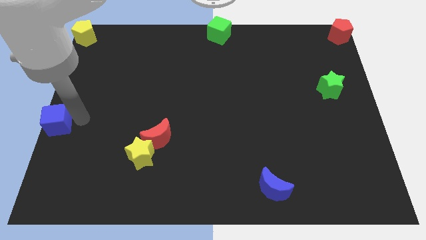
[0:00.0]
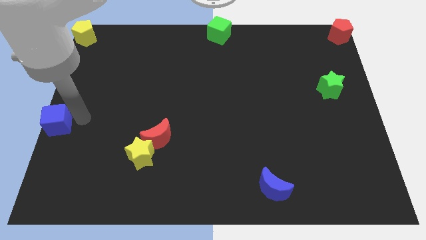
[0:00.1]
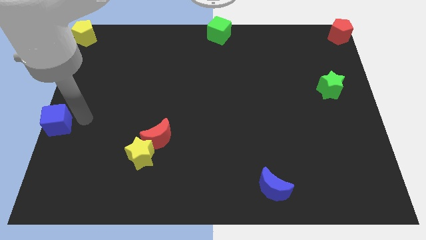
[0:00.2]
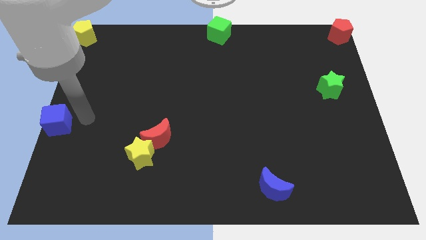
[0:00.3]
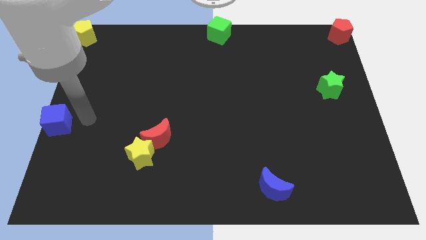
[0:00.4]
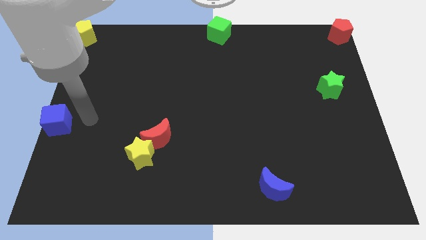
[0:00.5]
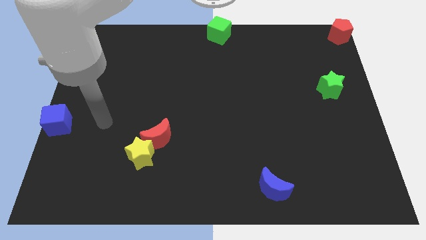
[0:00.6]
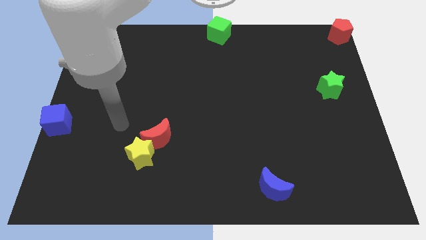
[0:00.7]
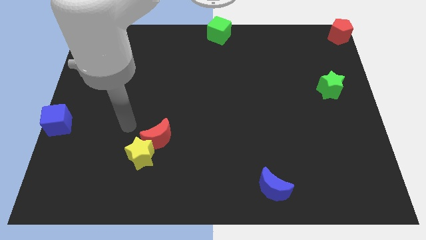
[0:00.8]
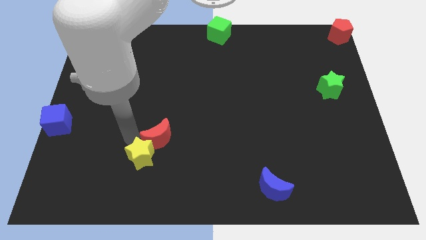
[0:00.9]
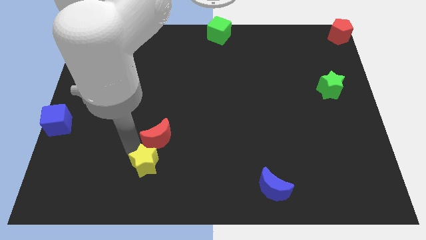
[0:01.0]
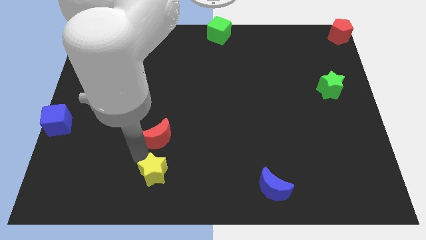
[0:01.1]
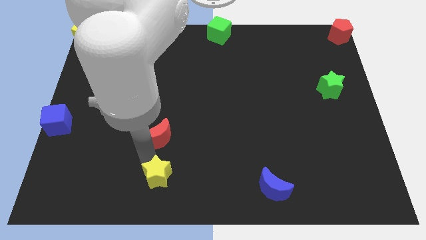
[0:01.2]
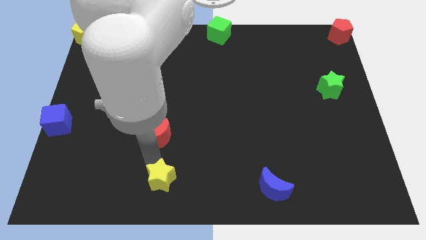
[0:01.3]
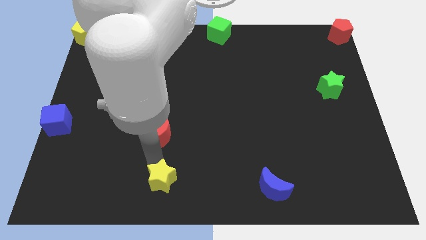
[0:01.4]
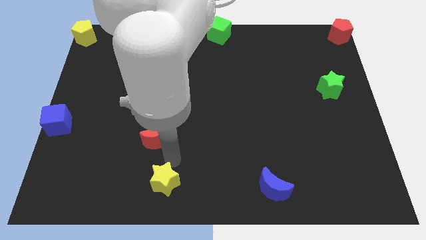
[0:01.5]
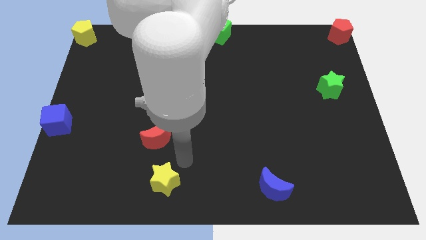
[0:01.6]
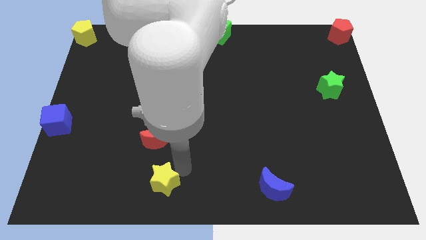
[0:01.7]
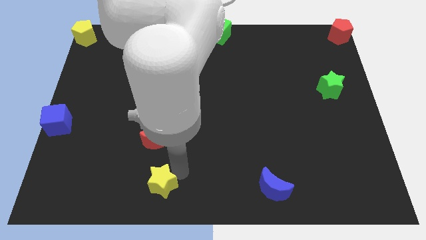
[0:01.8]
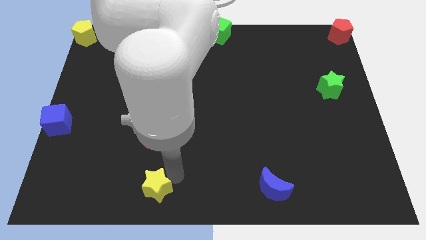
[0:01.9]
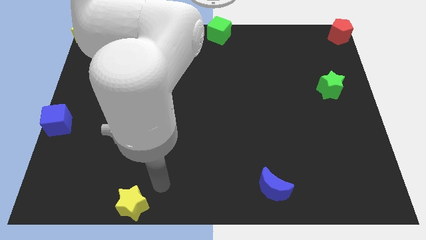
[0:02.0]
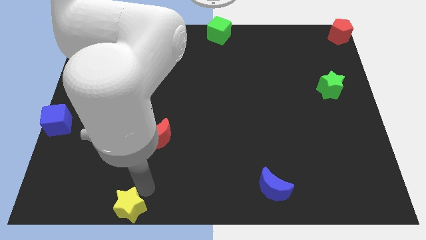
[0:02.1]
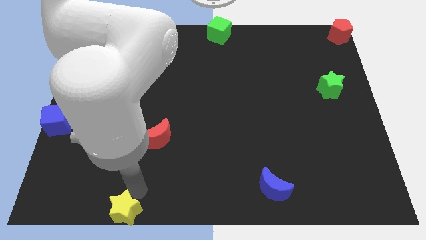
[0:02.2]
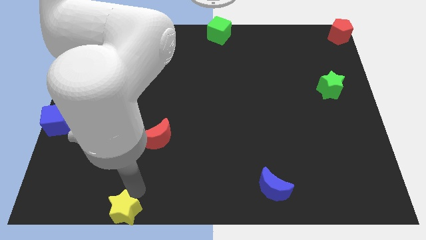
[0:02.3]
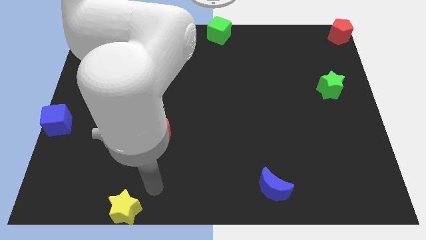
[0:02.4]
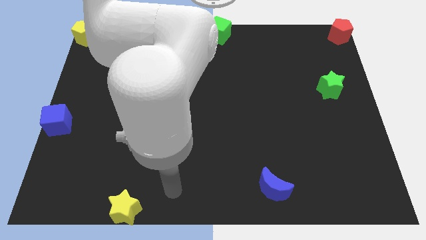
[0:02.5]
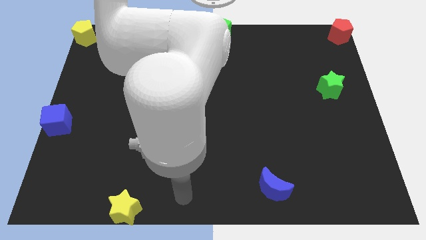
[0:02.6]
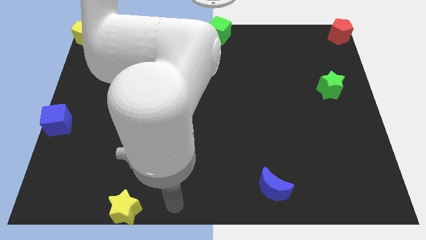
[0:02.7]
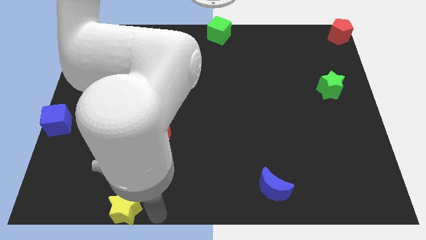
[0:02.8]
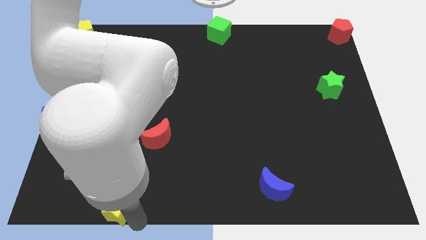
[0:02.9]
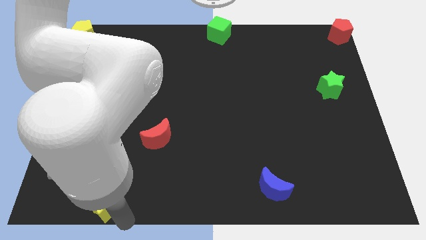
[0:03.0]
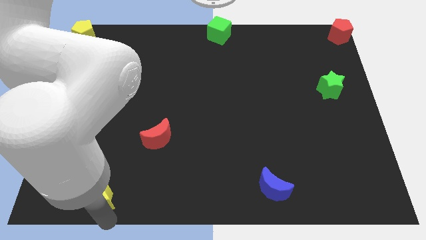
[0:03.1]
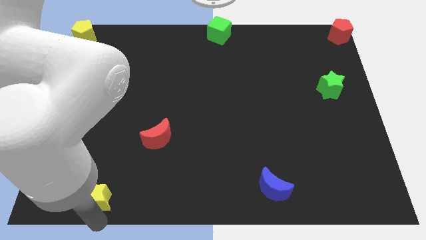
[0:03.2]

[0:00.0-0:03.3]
drag the yellow star towards the bottom center

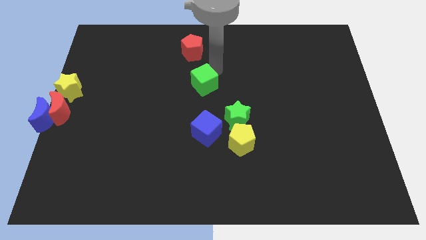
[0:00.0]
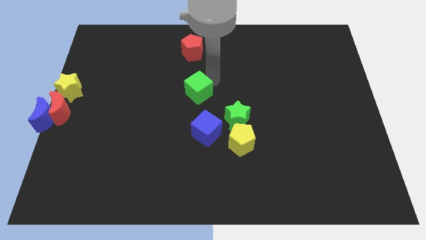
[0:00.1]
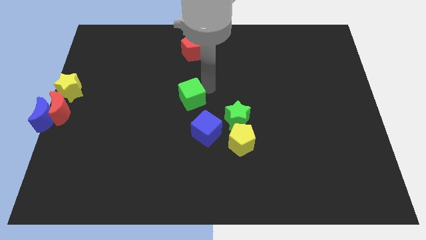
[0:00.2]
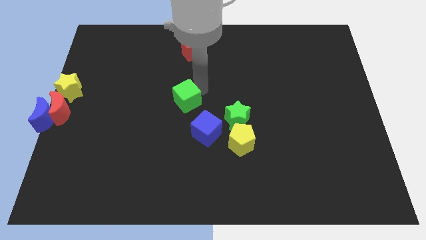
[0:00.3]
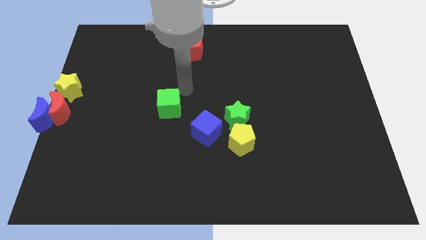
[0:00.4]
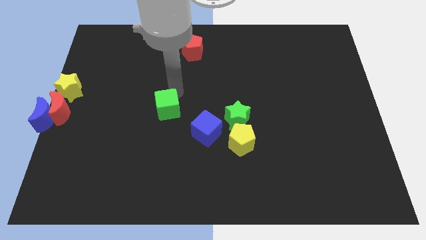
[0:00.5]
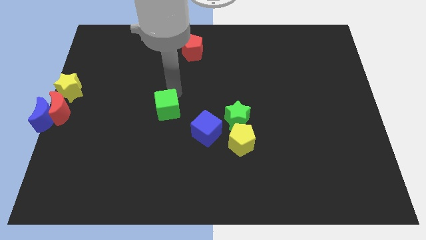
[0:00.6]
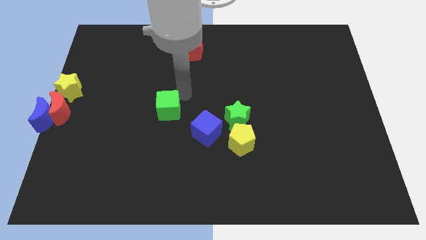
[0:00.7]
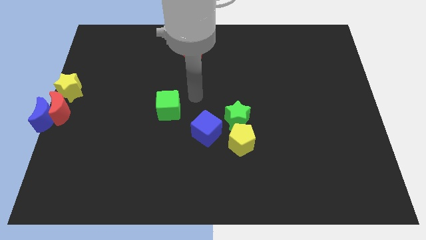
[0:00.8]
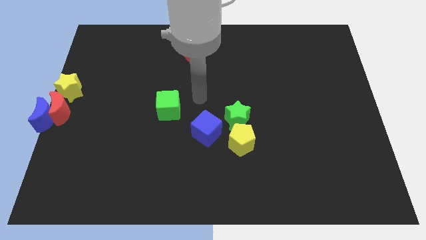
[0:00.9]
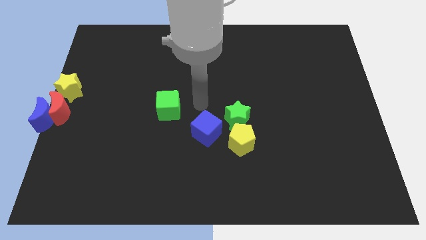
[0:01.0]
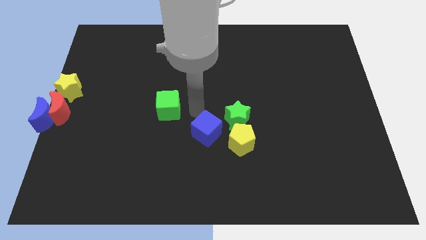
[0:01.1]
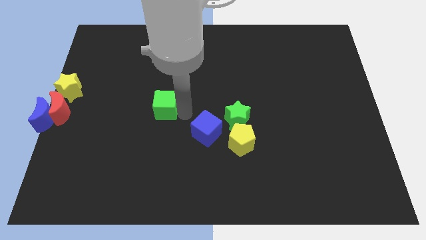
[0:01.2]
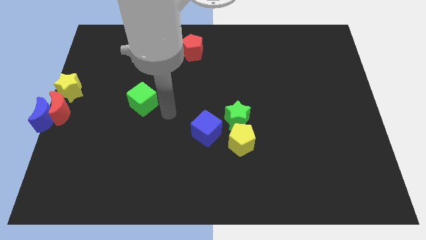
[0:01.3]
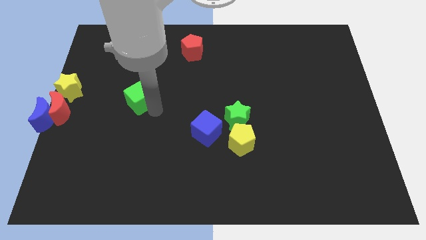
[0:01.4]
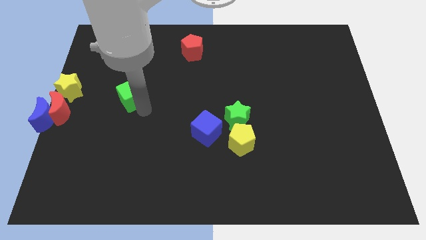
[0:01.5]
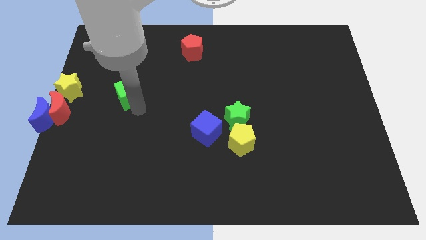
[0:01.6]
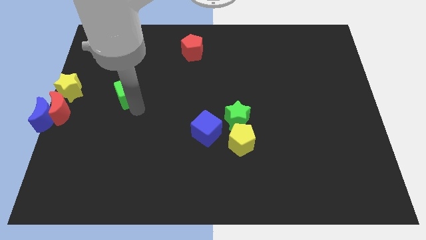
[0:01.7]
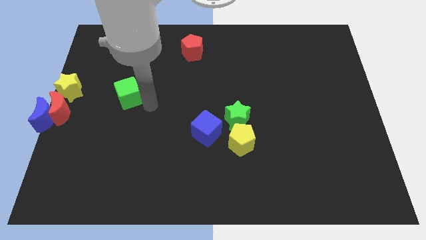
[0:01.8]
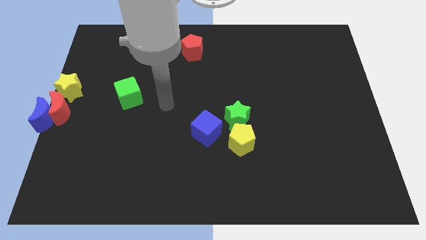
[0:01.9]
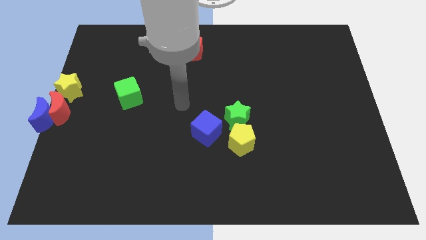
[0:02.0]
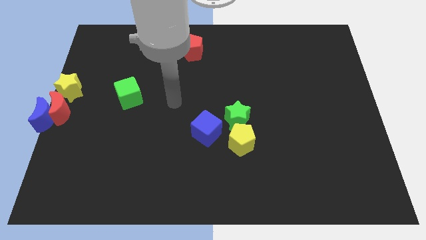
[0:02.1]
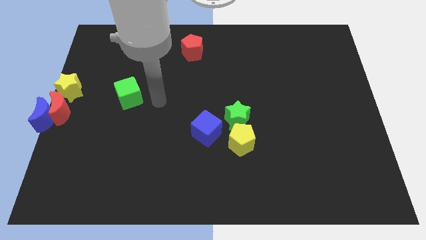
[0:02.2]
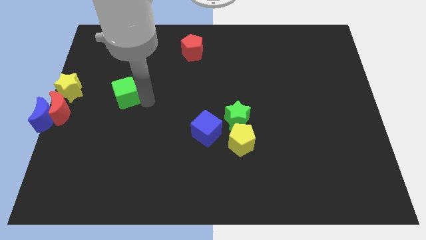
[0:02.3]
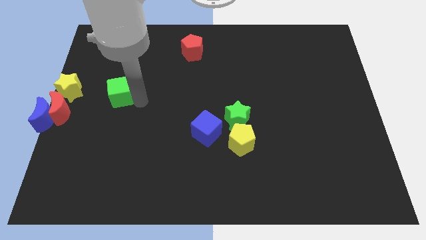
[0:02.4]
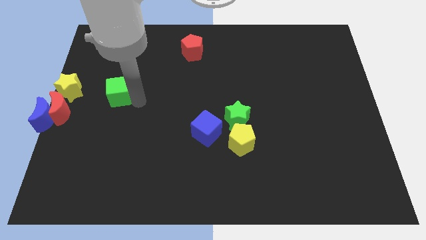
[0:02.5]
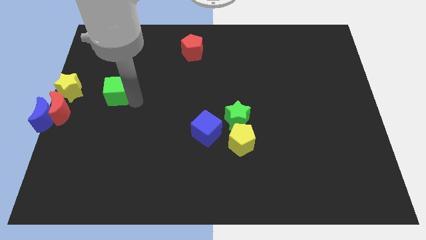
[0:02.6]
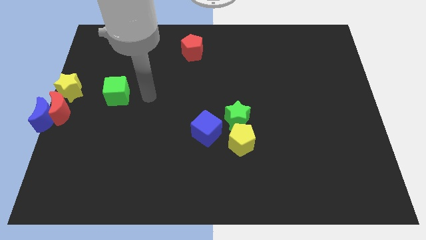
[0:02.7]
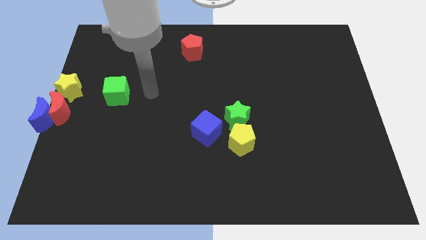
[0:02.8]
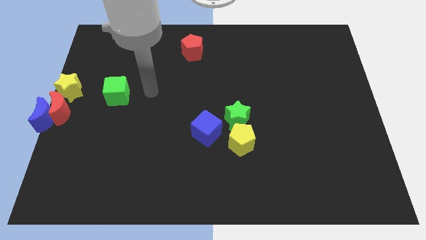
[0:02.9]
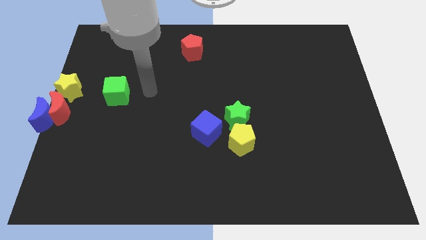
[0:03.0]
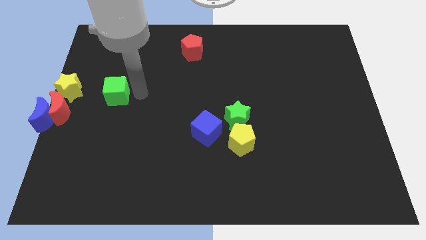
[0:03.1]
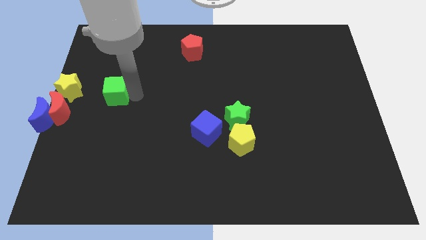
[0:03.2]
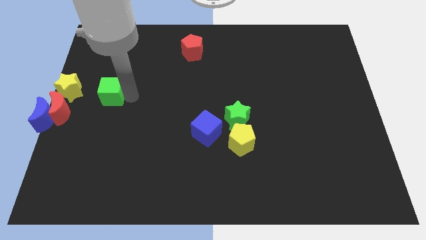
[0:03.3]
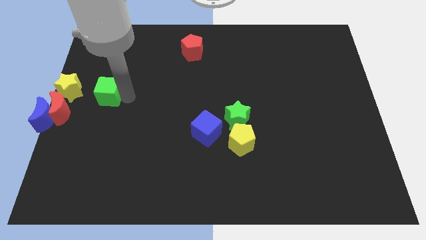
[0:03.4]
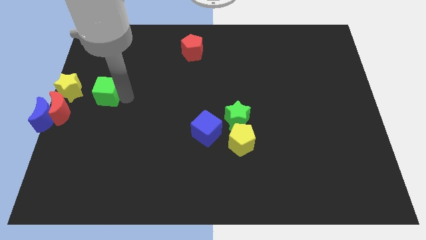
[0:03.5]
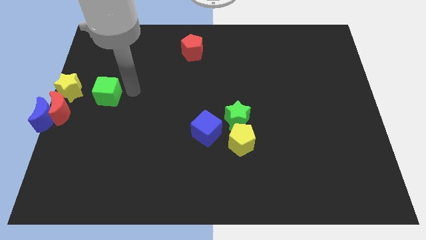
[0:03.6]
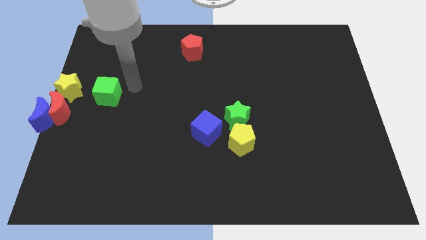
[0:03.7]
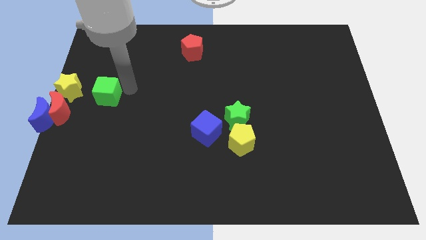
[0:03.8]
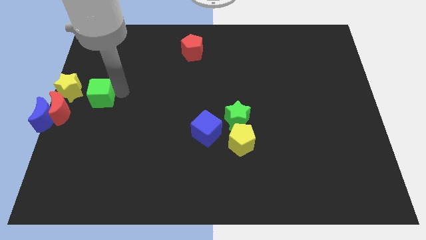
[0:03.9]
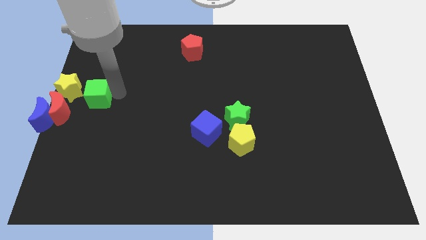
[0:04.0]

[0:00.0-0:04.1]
push the green cube to the right side of the yellow star

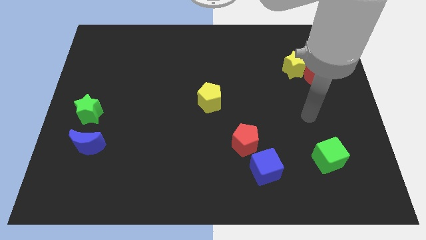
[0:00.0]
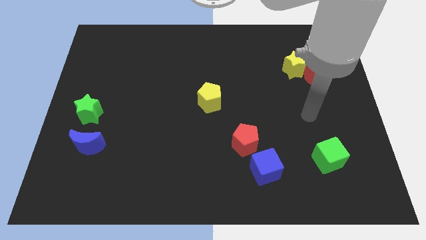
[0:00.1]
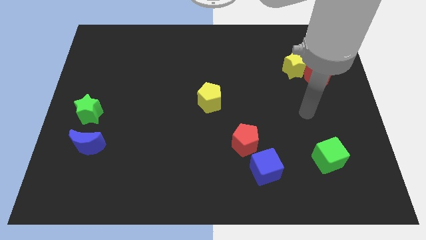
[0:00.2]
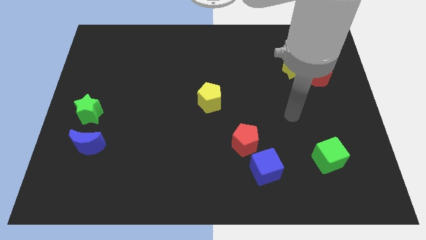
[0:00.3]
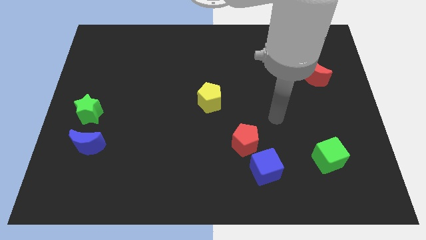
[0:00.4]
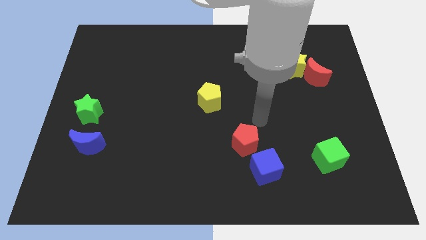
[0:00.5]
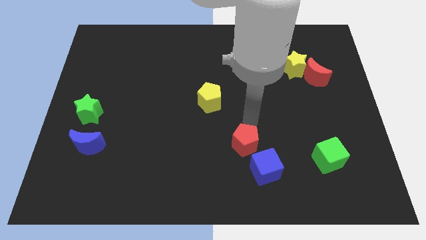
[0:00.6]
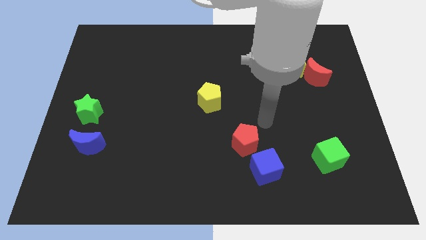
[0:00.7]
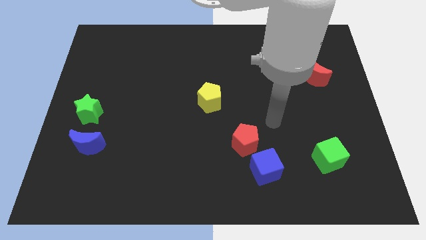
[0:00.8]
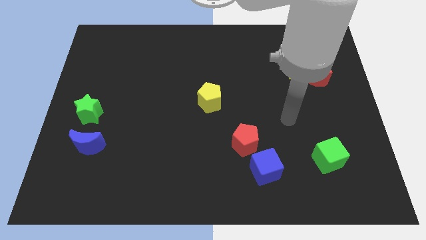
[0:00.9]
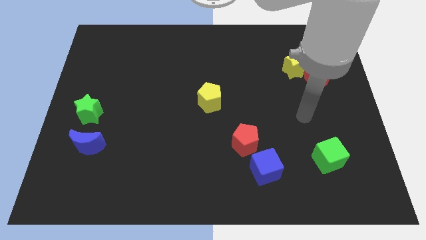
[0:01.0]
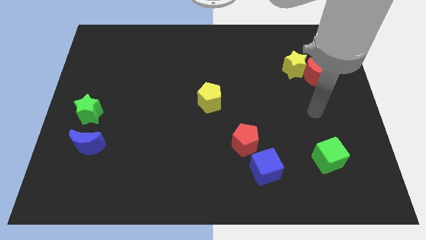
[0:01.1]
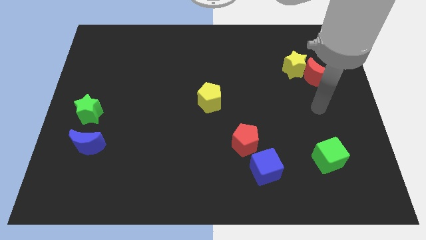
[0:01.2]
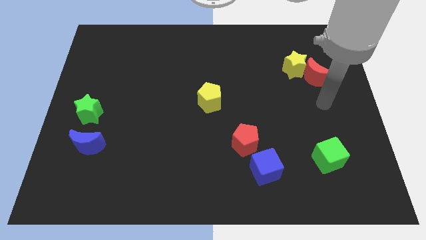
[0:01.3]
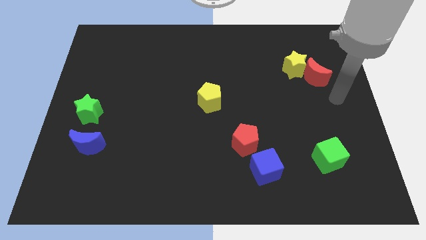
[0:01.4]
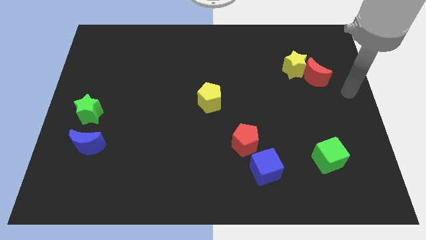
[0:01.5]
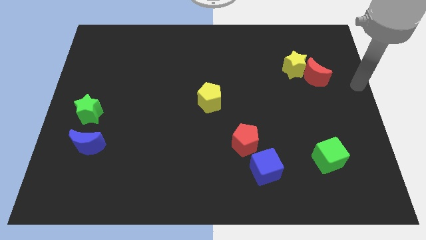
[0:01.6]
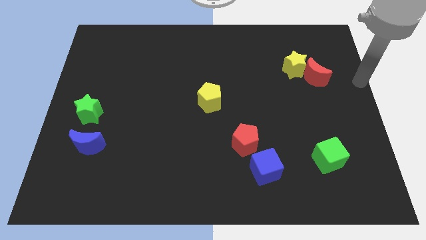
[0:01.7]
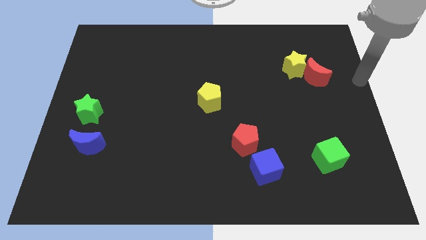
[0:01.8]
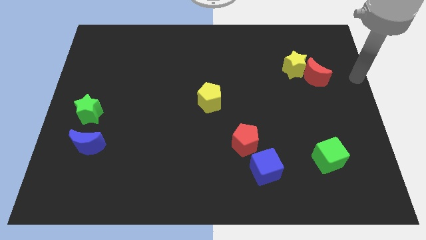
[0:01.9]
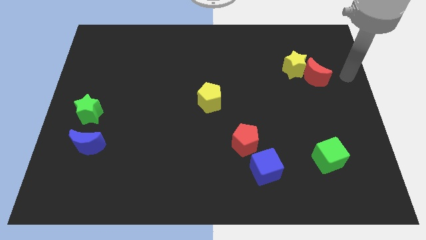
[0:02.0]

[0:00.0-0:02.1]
point your arm at the right side of the red moon
